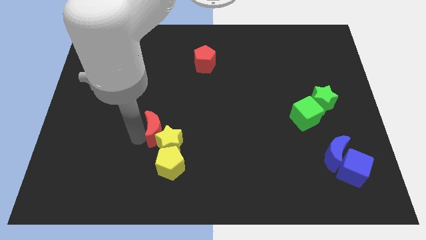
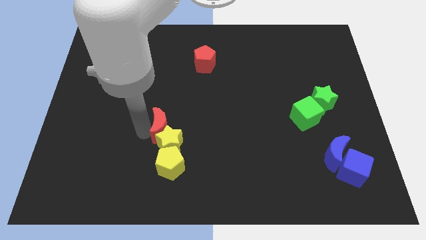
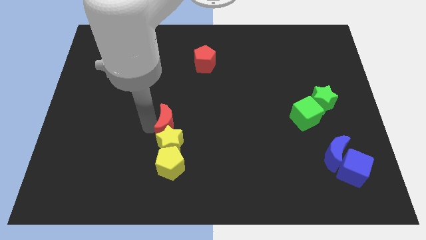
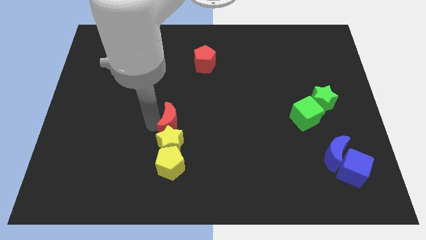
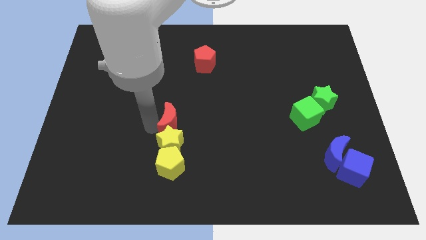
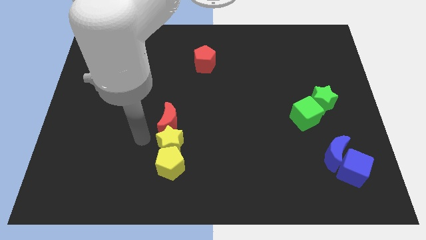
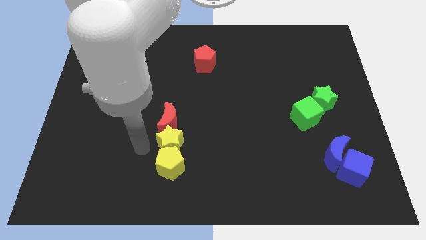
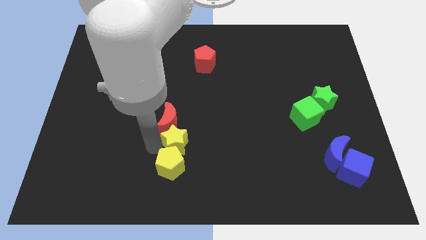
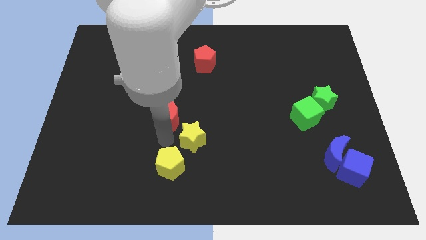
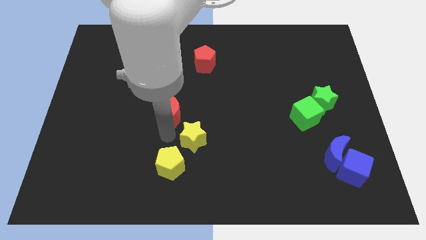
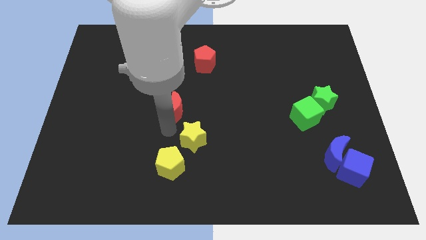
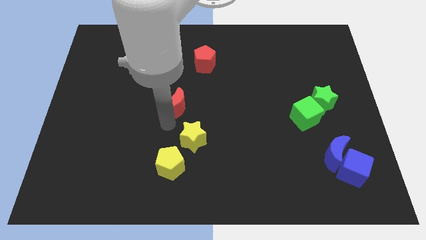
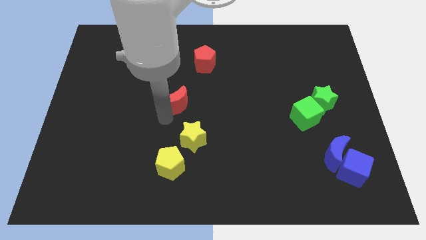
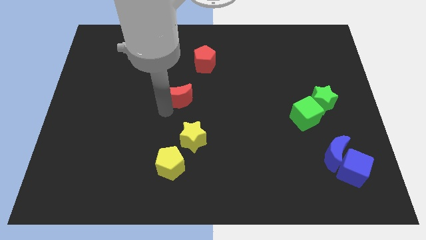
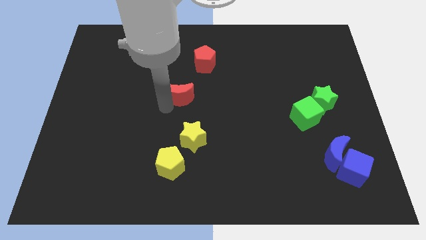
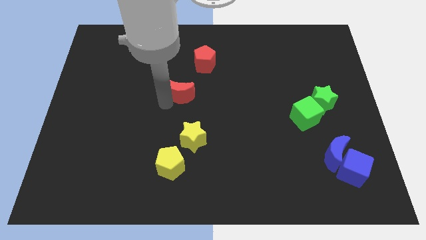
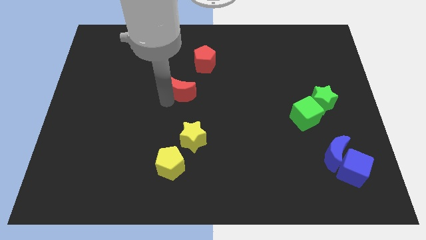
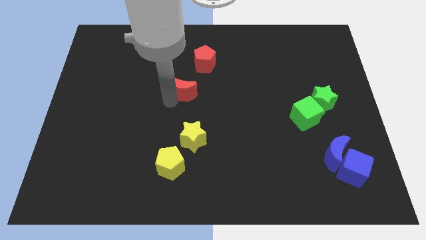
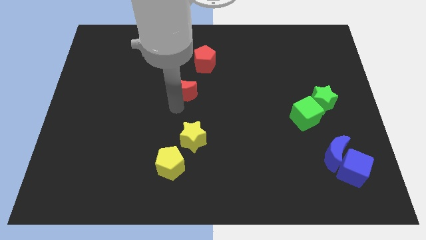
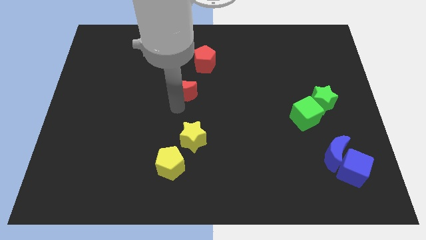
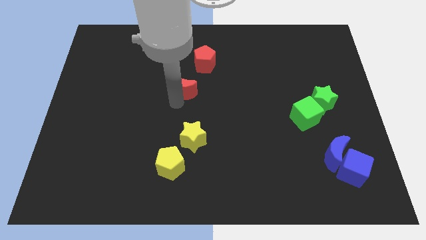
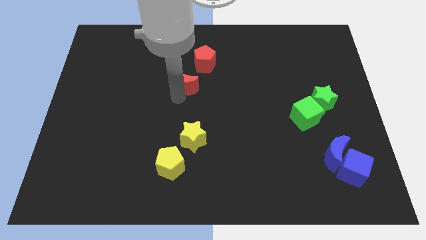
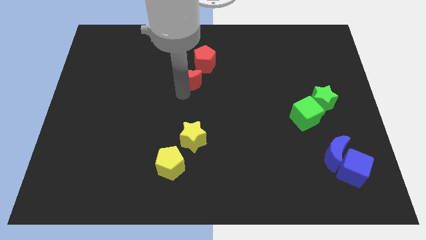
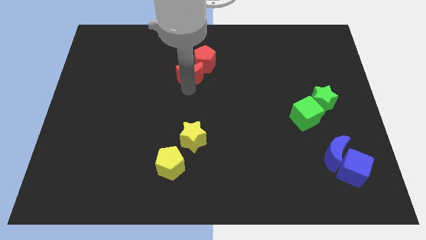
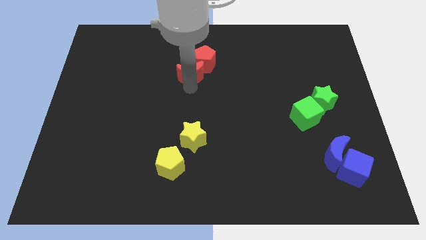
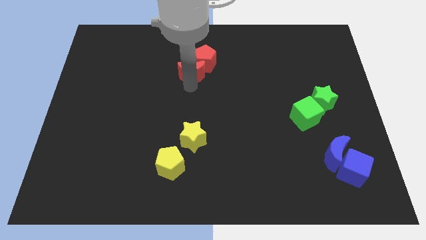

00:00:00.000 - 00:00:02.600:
place the red moon below the red pentagon

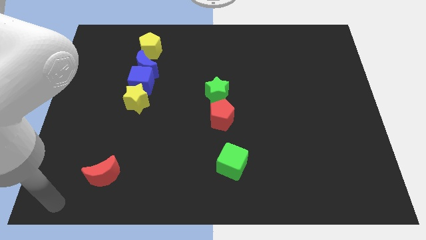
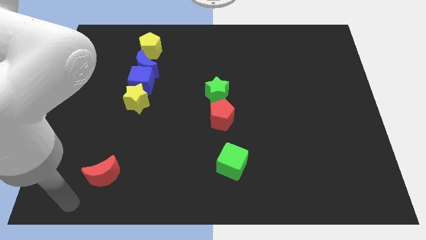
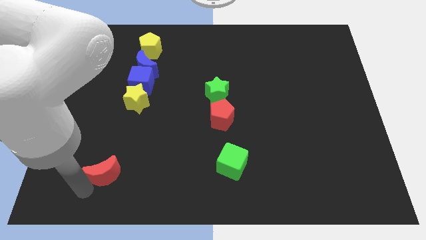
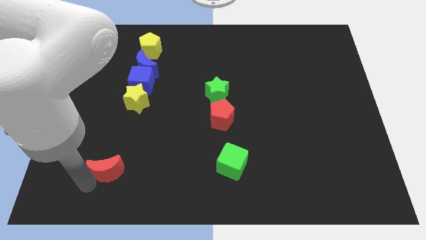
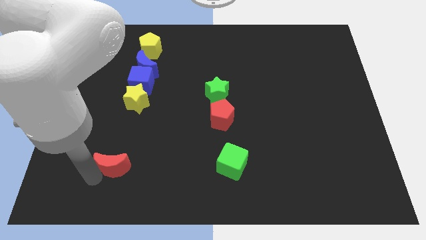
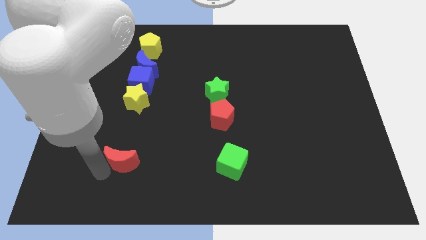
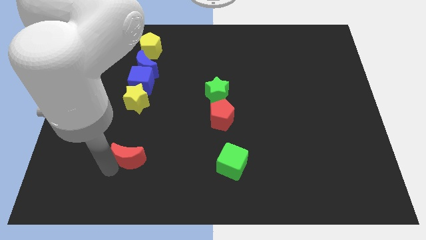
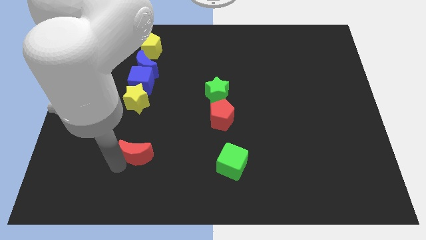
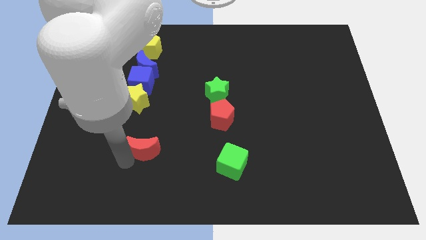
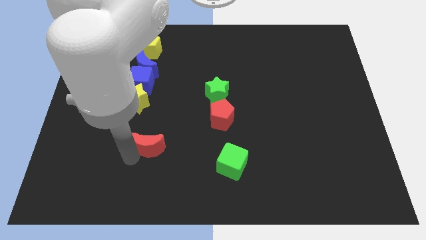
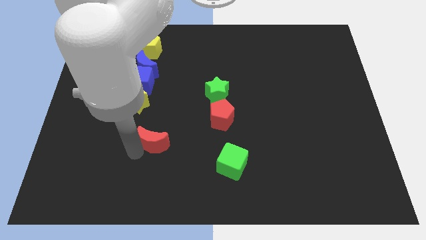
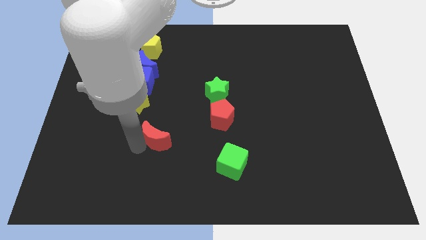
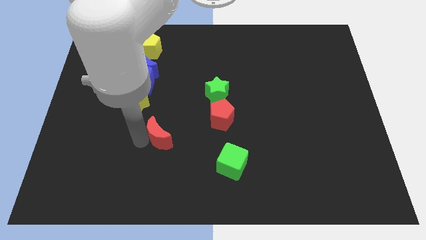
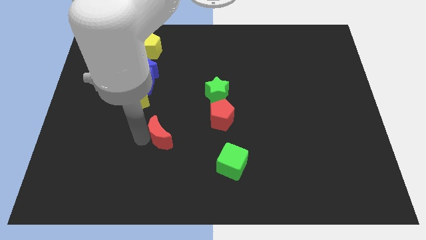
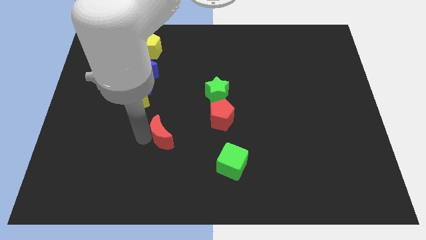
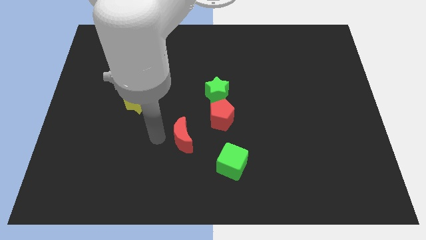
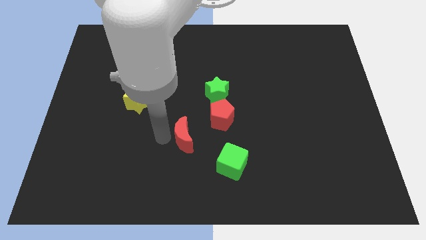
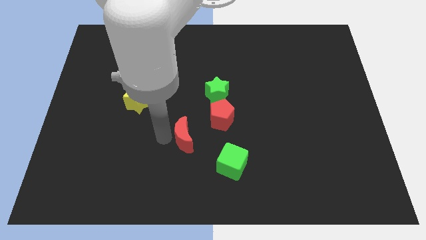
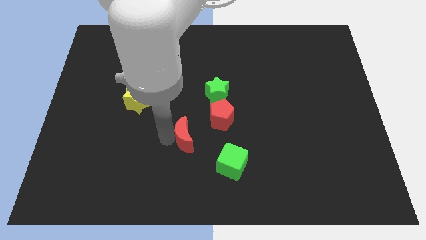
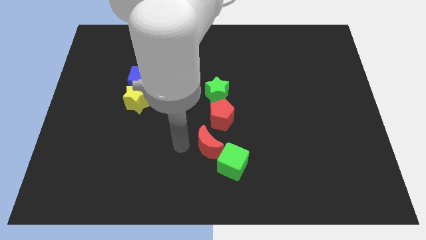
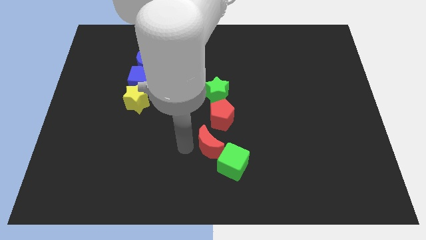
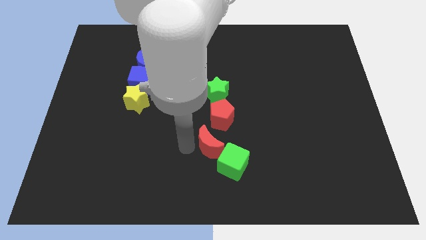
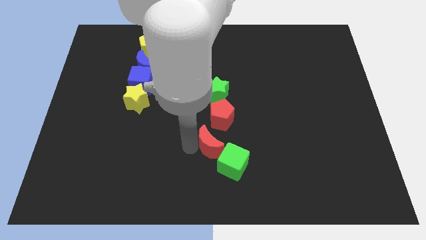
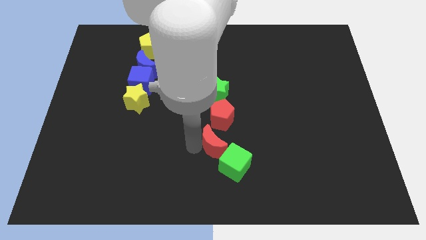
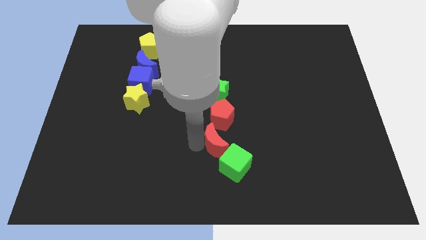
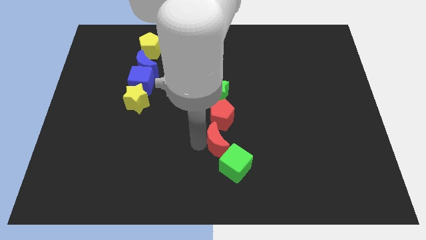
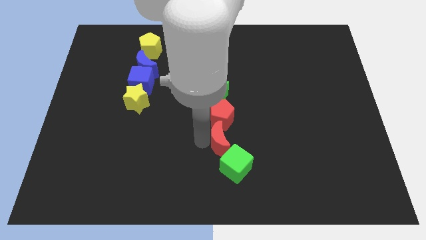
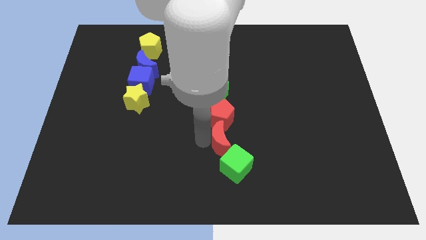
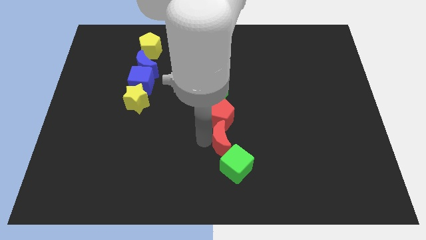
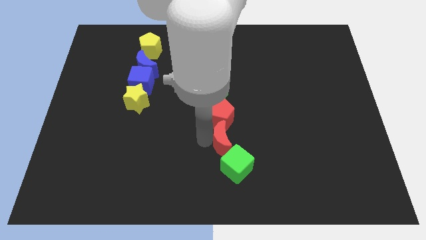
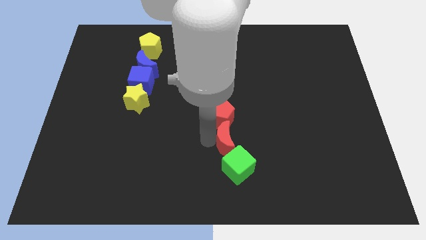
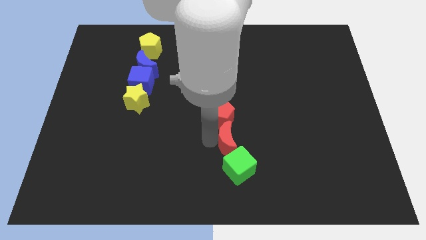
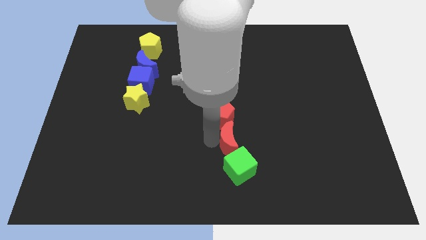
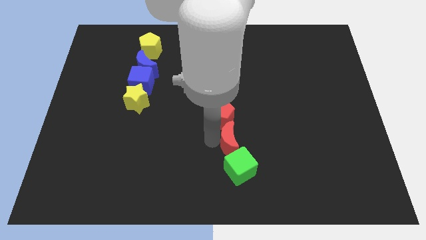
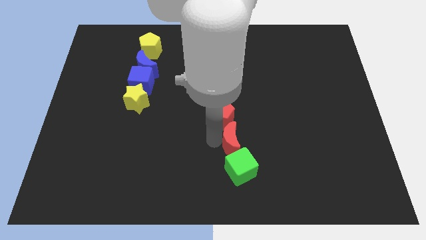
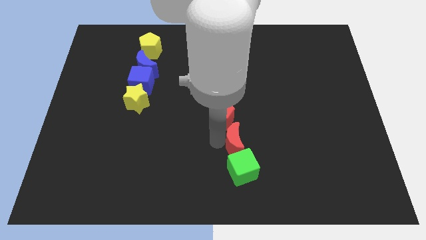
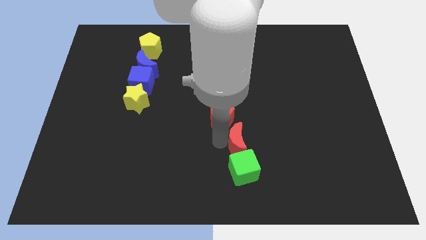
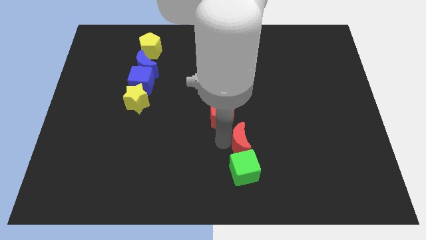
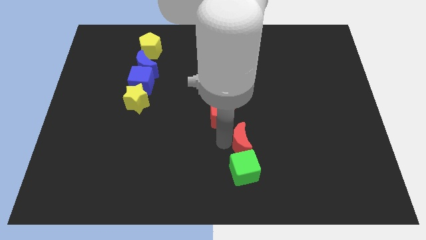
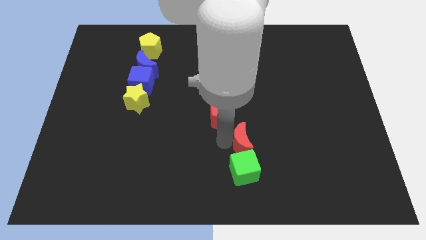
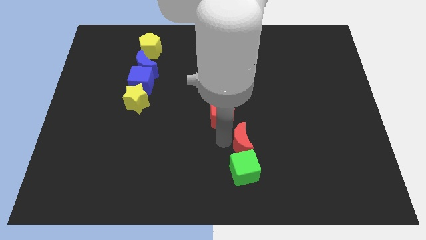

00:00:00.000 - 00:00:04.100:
place red moon on top of green cube

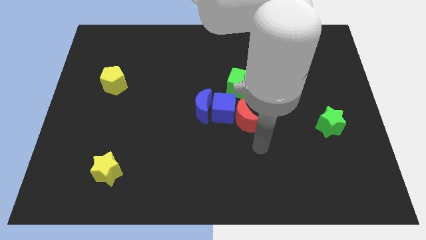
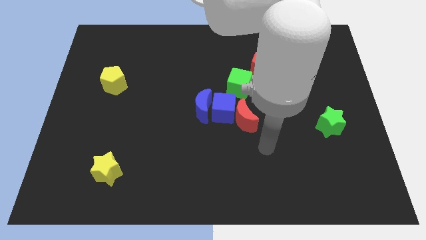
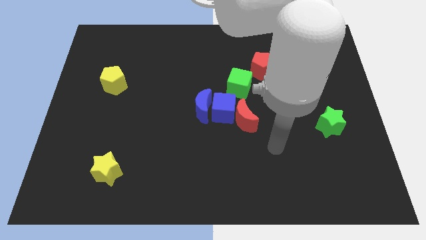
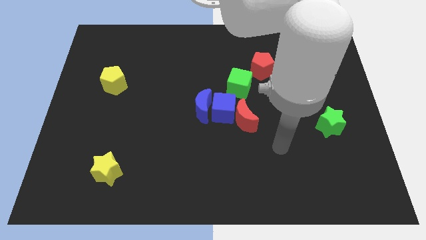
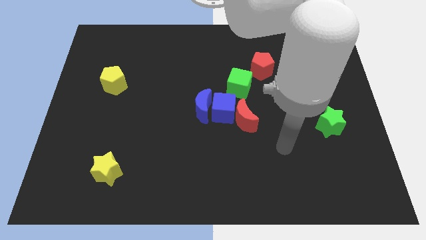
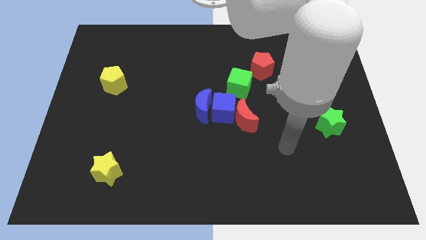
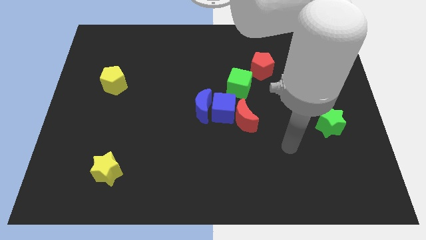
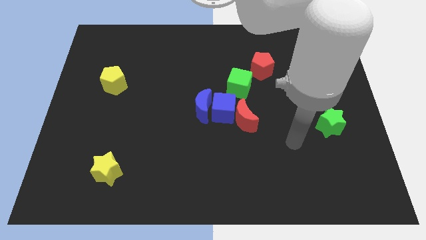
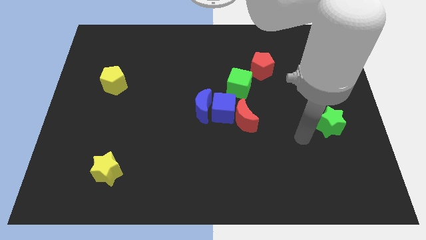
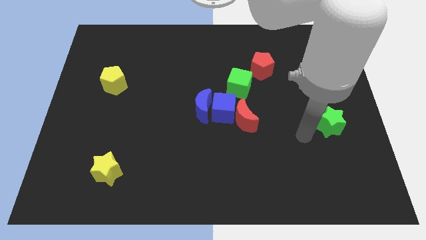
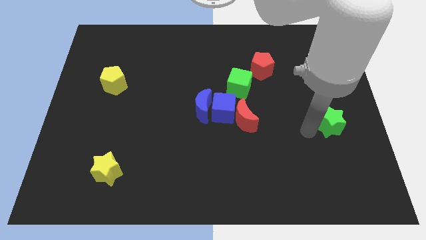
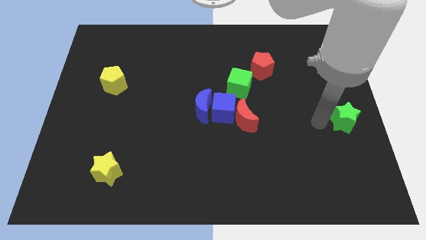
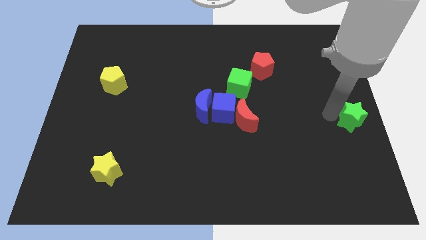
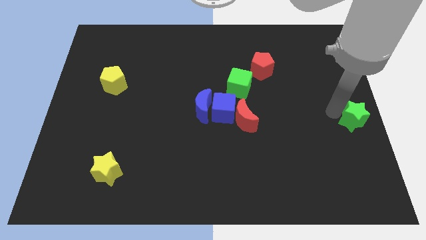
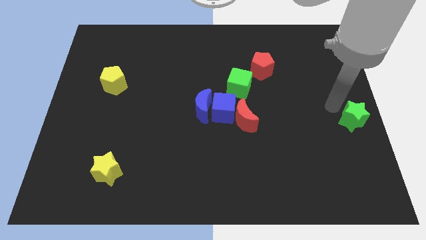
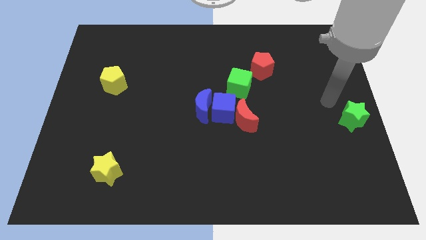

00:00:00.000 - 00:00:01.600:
move your arm away from the red moon

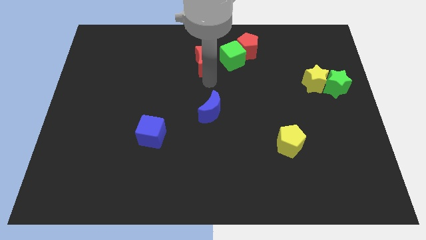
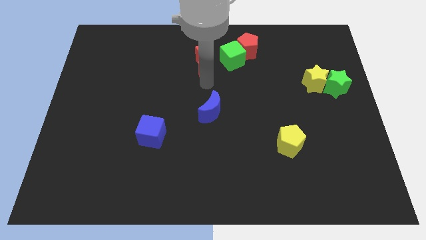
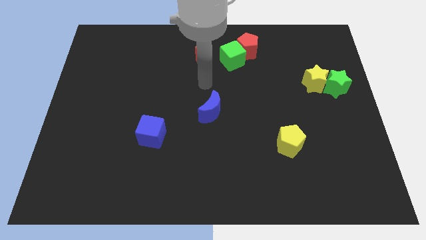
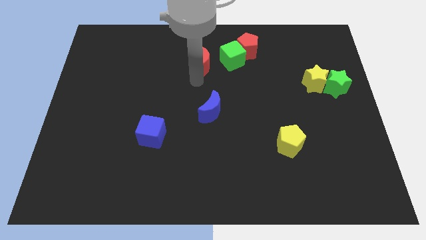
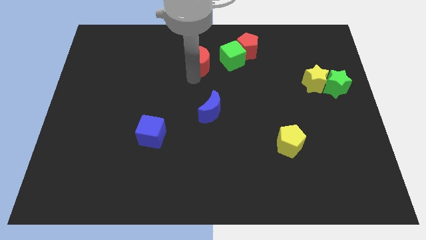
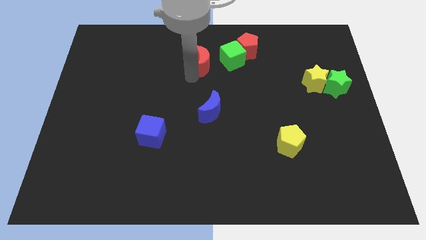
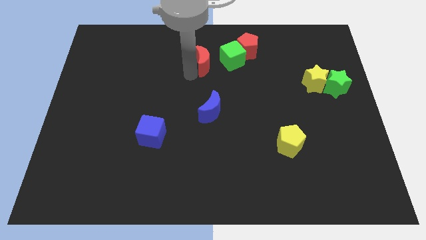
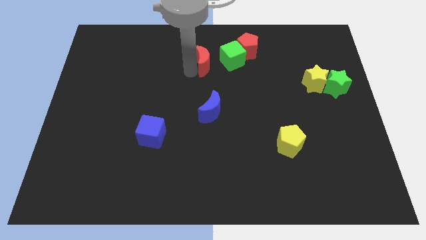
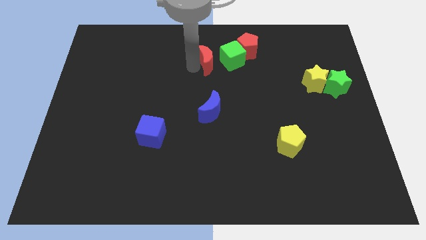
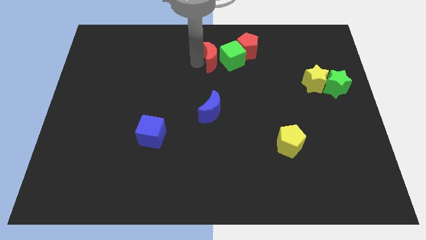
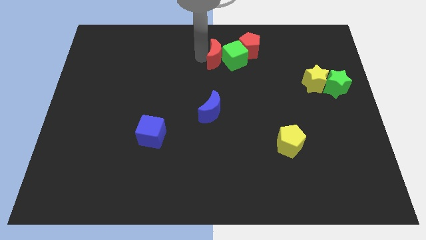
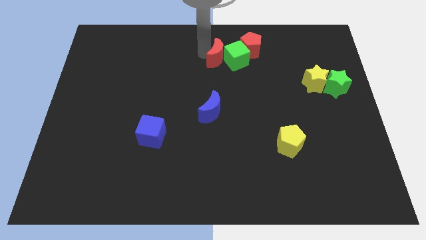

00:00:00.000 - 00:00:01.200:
push red crescent to the left of the green cube
